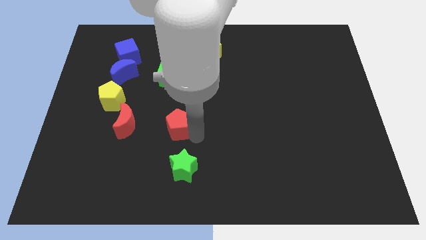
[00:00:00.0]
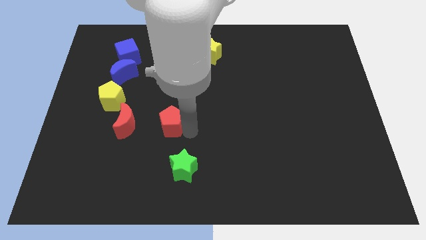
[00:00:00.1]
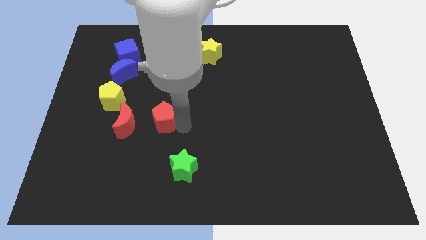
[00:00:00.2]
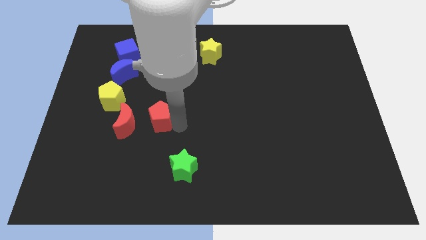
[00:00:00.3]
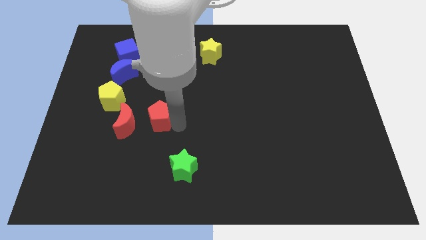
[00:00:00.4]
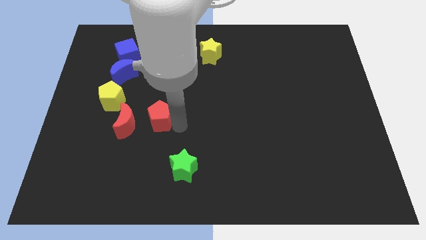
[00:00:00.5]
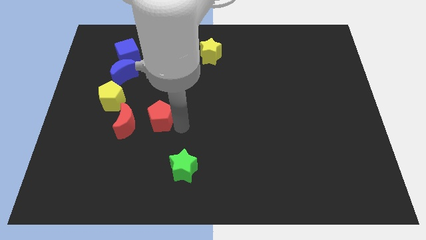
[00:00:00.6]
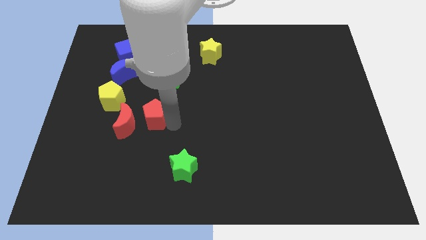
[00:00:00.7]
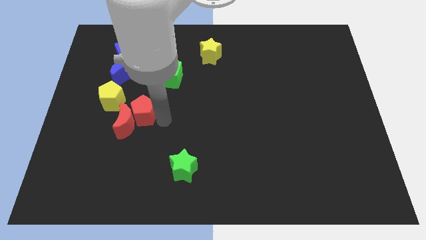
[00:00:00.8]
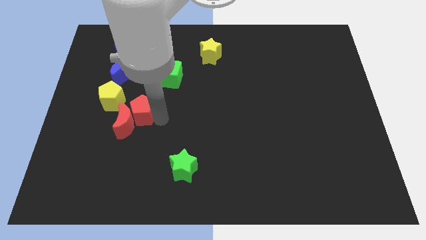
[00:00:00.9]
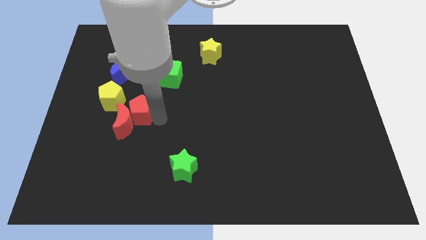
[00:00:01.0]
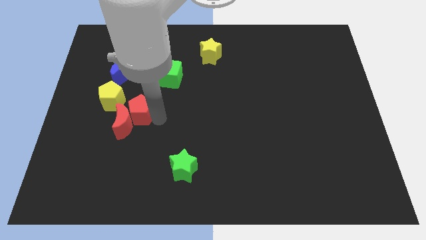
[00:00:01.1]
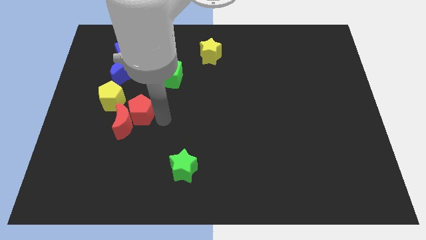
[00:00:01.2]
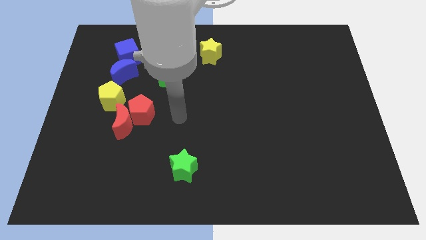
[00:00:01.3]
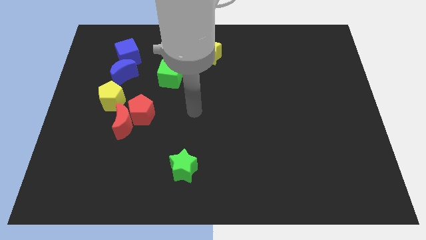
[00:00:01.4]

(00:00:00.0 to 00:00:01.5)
push the red pentagon into the red crescent

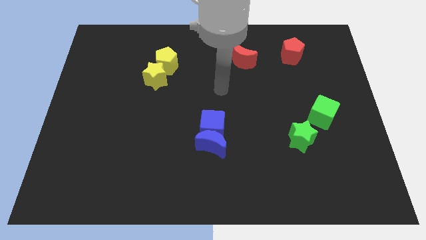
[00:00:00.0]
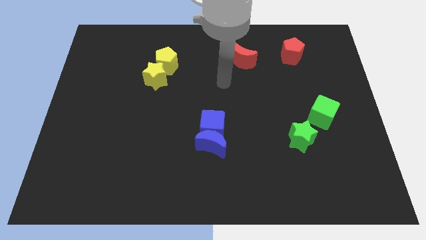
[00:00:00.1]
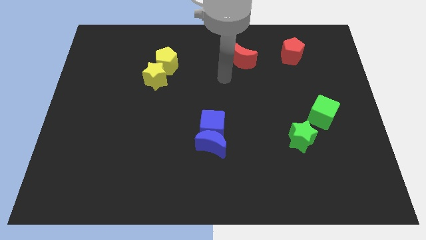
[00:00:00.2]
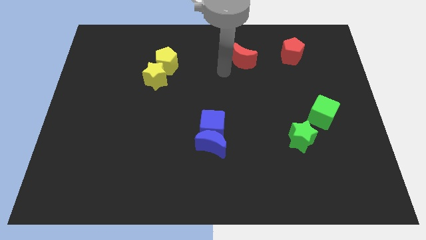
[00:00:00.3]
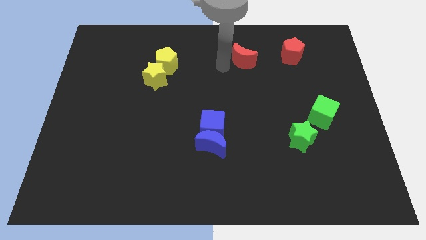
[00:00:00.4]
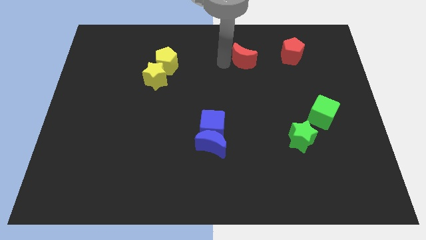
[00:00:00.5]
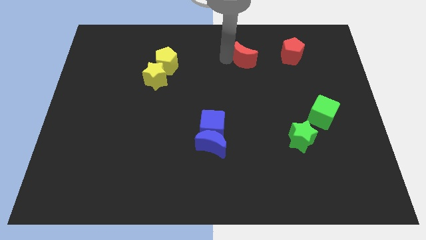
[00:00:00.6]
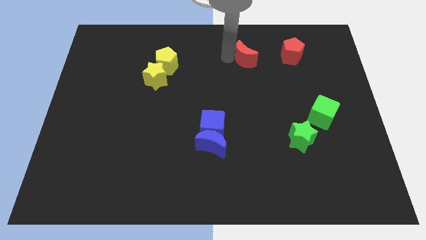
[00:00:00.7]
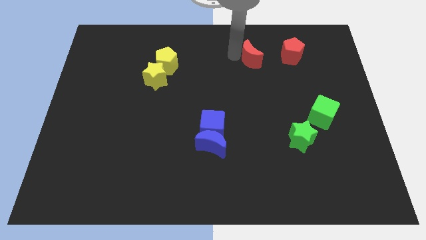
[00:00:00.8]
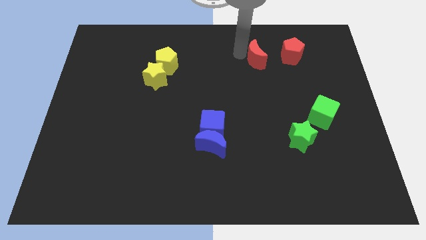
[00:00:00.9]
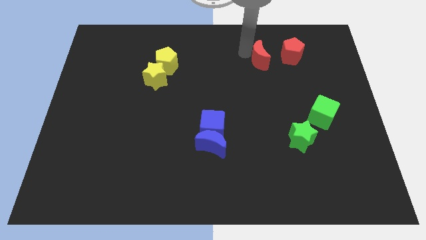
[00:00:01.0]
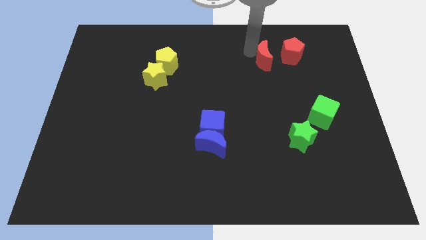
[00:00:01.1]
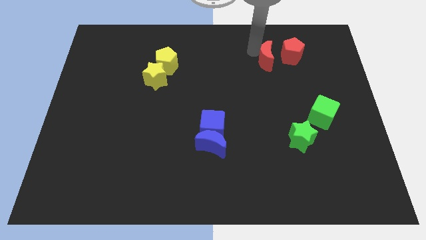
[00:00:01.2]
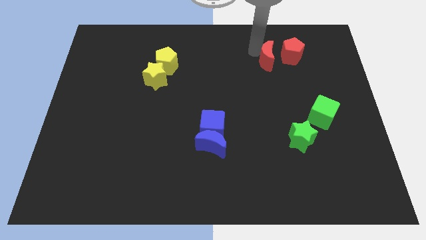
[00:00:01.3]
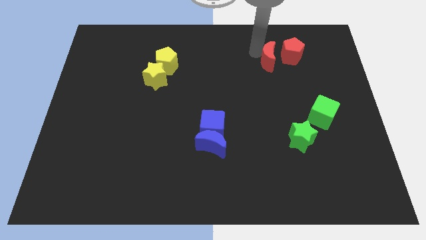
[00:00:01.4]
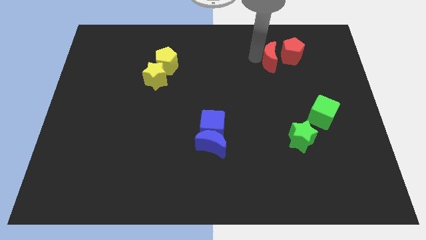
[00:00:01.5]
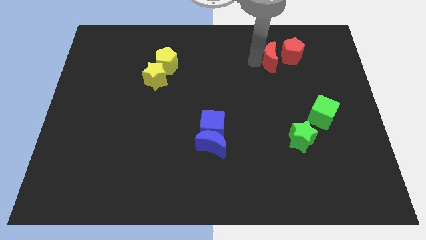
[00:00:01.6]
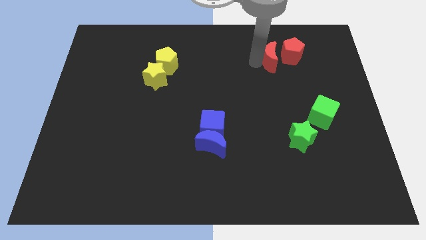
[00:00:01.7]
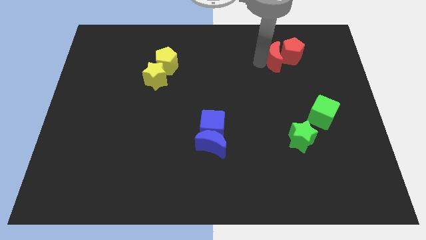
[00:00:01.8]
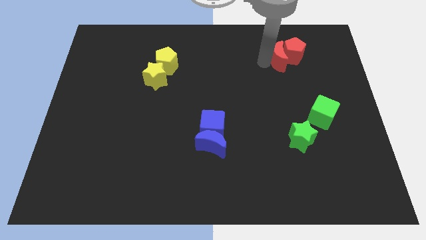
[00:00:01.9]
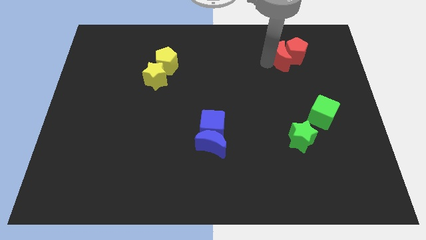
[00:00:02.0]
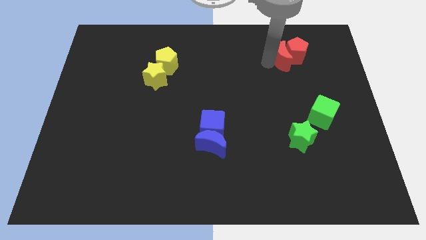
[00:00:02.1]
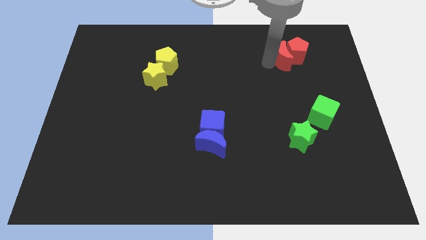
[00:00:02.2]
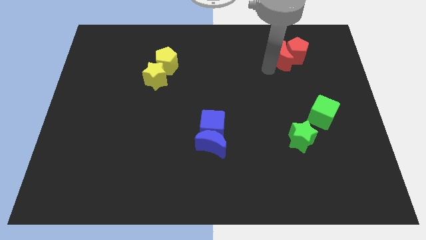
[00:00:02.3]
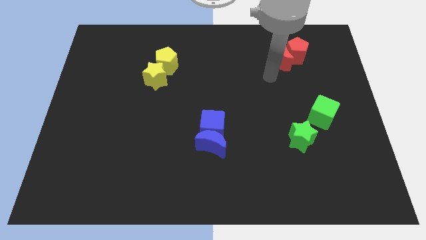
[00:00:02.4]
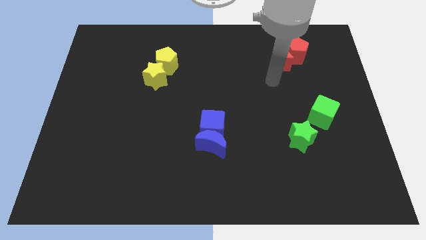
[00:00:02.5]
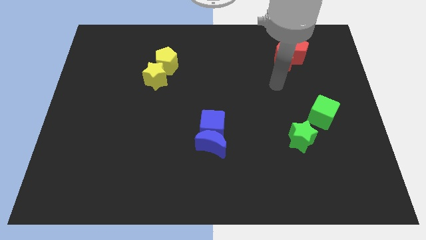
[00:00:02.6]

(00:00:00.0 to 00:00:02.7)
push the red crescent into the red pentagon

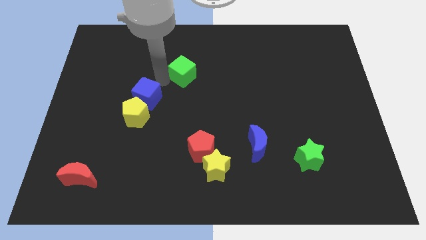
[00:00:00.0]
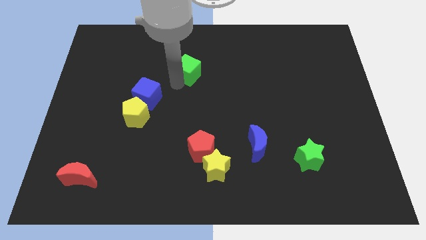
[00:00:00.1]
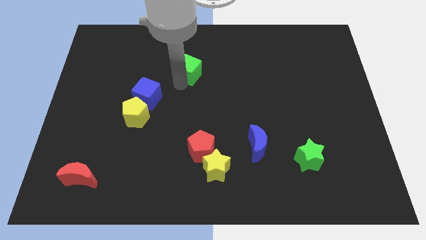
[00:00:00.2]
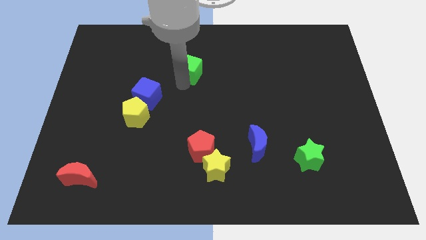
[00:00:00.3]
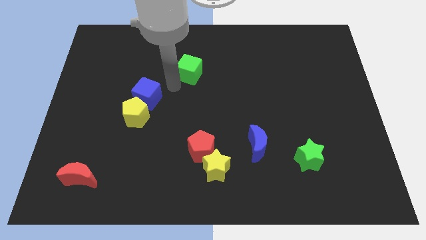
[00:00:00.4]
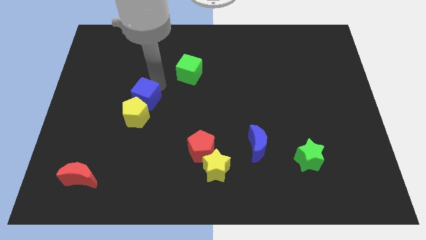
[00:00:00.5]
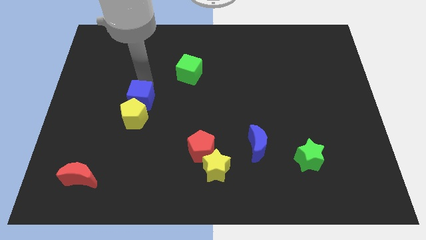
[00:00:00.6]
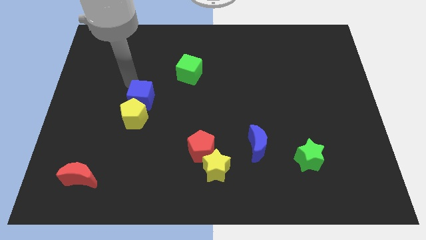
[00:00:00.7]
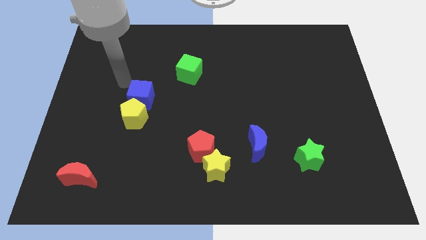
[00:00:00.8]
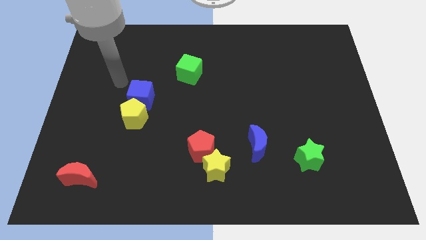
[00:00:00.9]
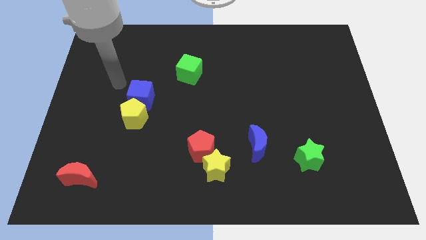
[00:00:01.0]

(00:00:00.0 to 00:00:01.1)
separate blue and green cubes from each other

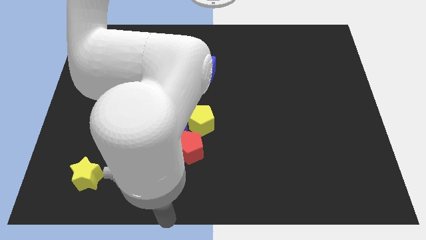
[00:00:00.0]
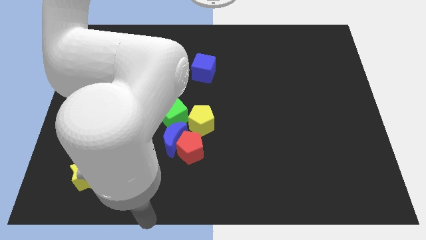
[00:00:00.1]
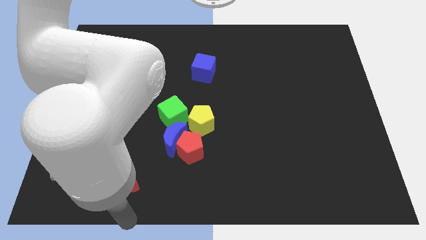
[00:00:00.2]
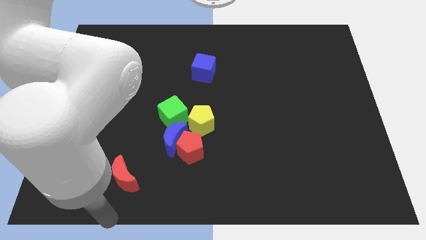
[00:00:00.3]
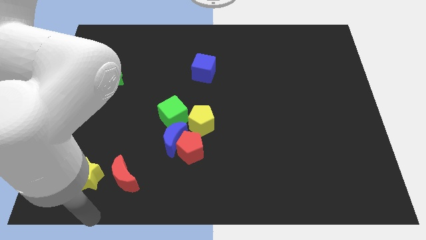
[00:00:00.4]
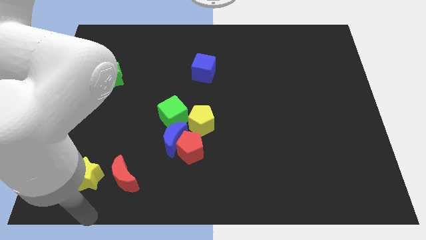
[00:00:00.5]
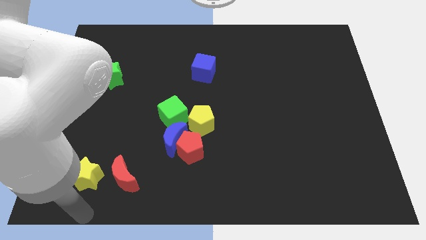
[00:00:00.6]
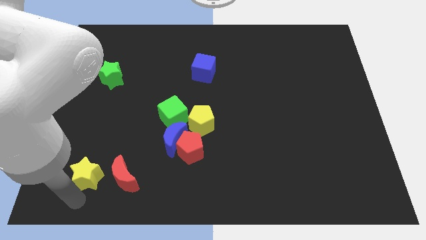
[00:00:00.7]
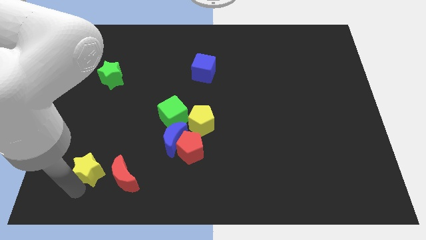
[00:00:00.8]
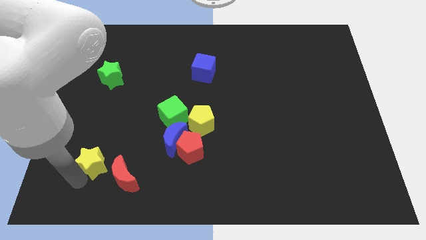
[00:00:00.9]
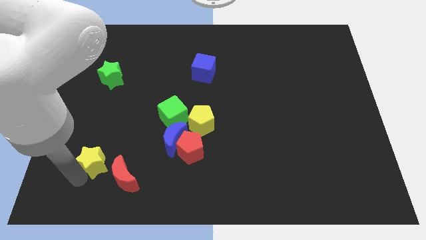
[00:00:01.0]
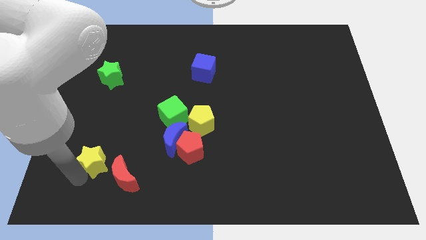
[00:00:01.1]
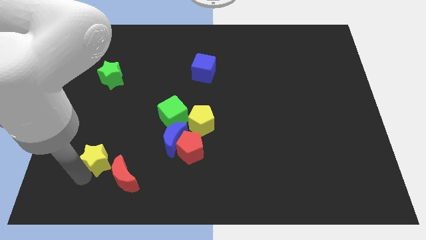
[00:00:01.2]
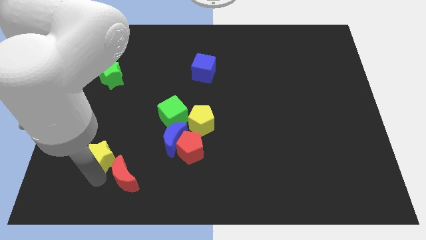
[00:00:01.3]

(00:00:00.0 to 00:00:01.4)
move the yellow star slightly to top

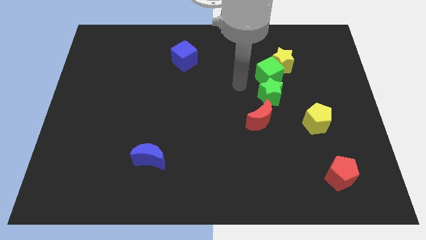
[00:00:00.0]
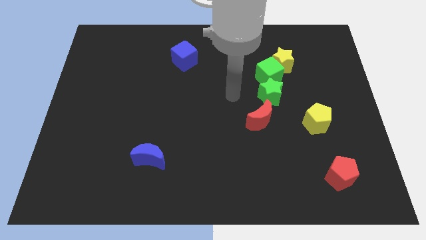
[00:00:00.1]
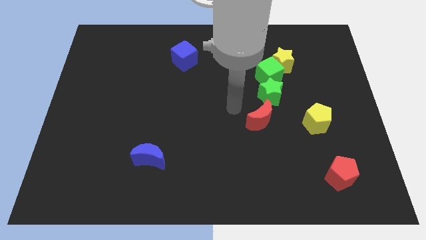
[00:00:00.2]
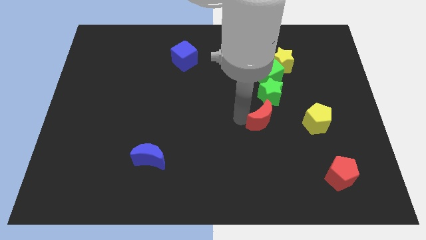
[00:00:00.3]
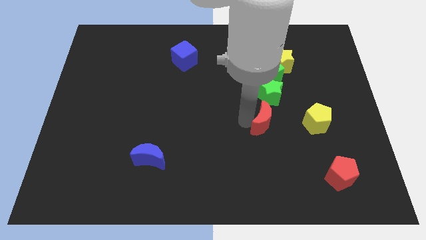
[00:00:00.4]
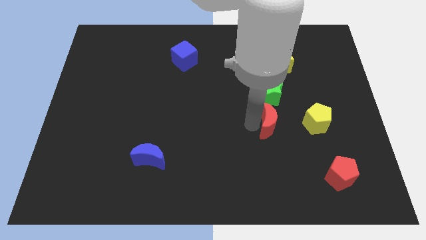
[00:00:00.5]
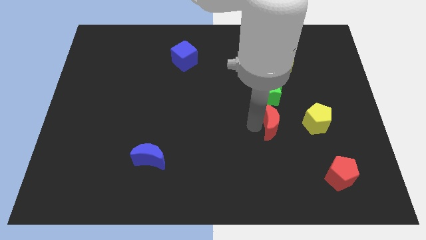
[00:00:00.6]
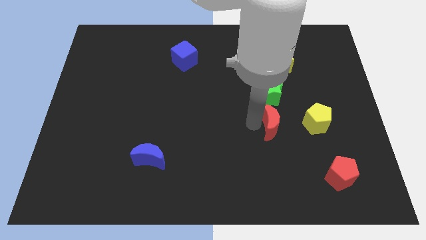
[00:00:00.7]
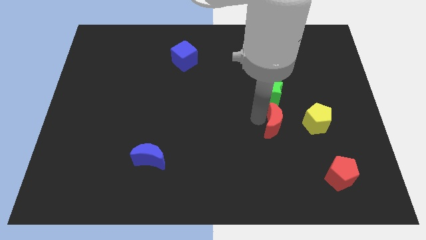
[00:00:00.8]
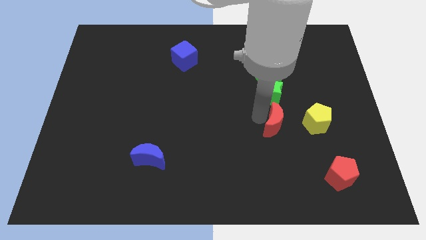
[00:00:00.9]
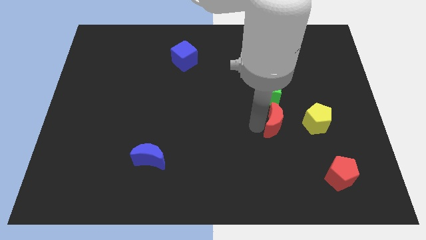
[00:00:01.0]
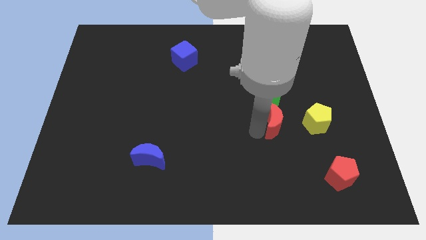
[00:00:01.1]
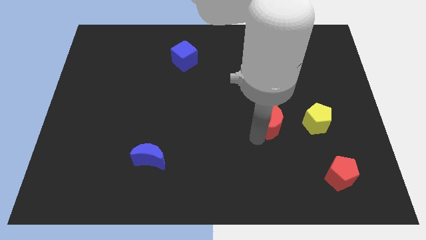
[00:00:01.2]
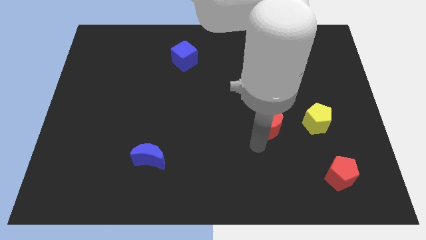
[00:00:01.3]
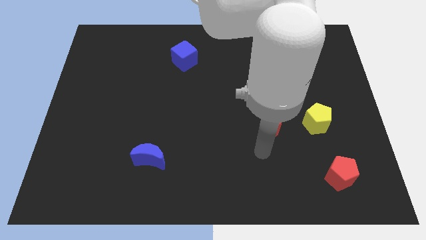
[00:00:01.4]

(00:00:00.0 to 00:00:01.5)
place the red crescent in a vertical line with green blocks and yellow star

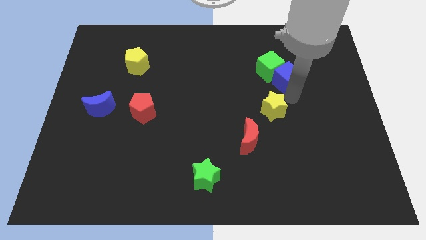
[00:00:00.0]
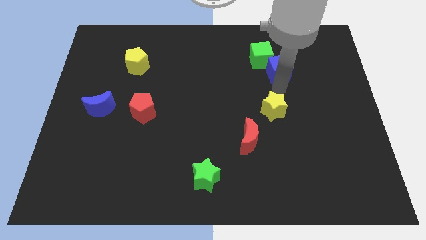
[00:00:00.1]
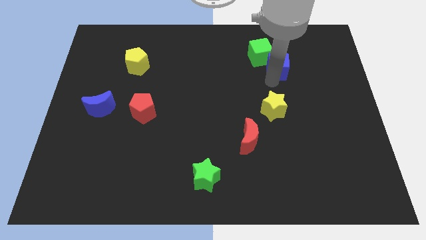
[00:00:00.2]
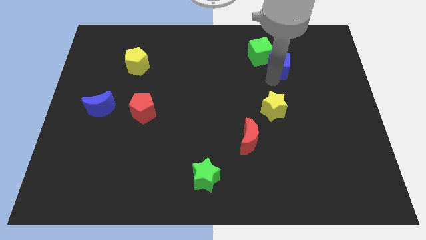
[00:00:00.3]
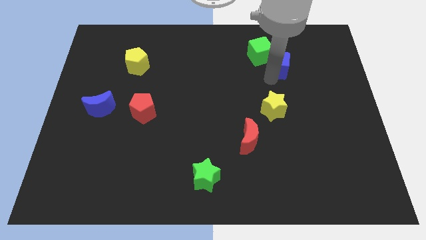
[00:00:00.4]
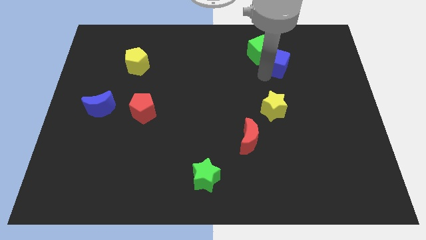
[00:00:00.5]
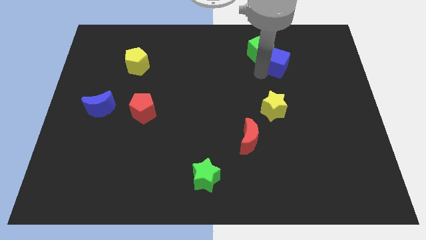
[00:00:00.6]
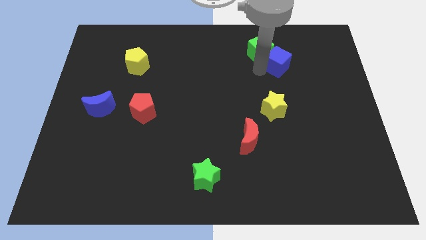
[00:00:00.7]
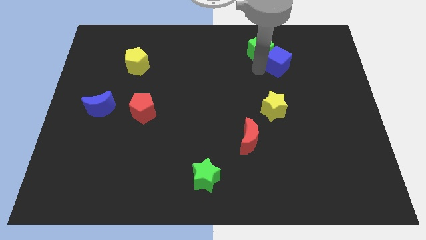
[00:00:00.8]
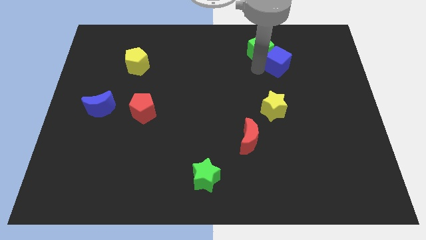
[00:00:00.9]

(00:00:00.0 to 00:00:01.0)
slightly move the blue cube along with green cube towards the top
